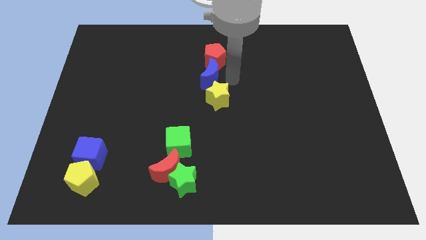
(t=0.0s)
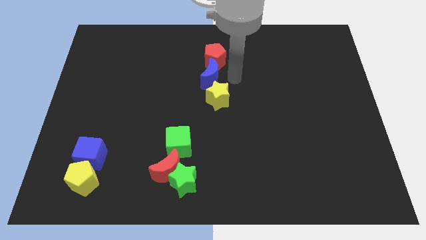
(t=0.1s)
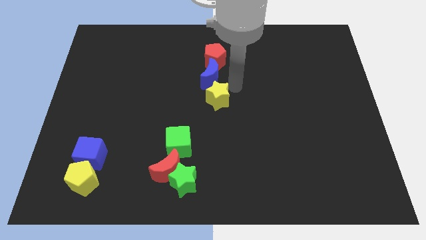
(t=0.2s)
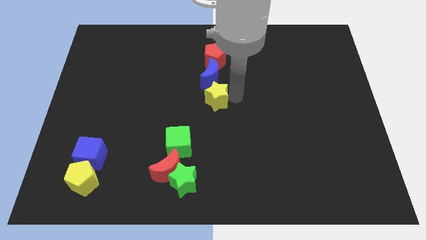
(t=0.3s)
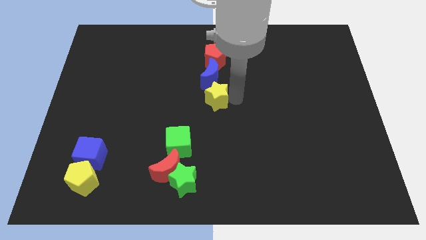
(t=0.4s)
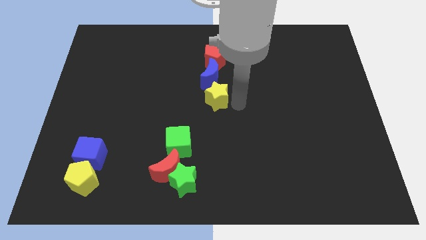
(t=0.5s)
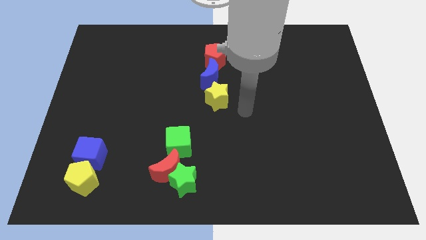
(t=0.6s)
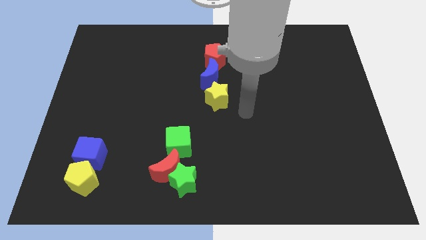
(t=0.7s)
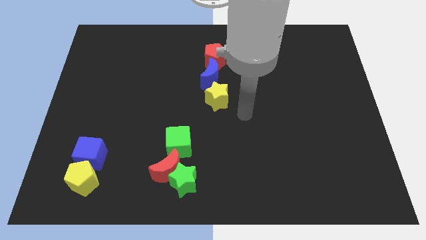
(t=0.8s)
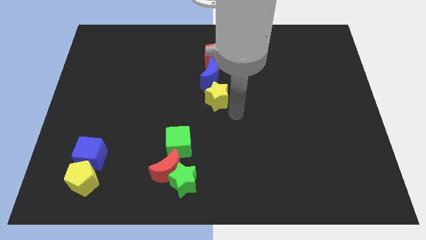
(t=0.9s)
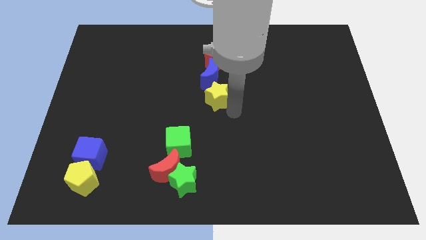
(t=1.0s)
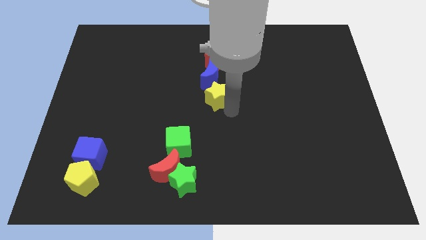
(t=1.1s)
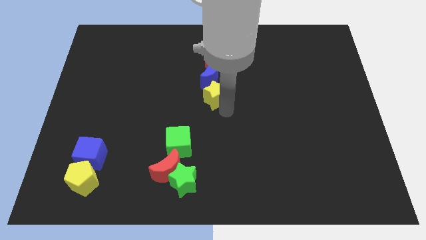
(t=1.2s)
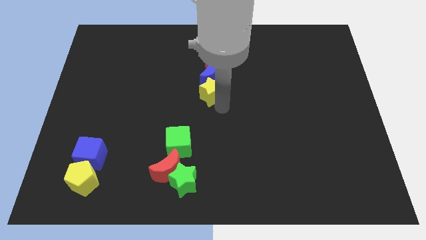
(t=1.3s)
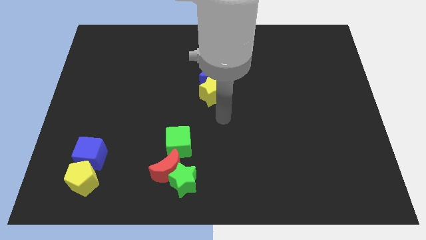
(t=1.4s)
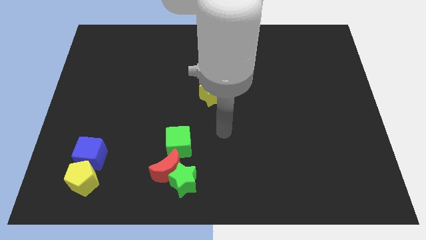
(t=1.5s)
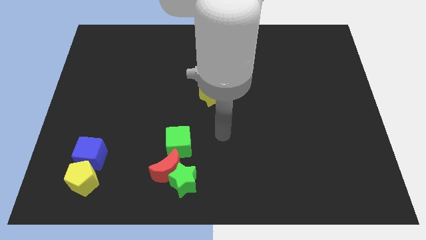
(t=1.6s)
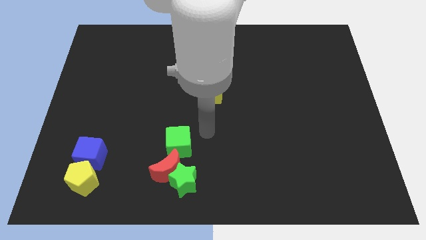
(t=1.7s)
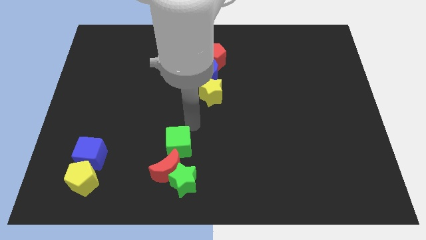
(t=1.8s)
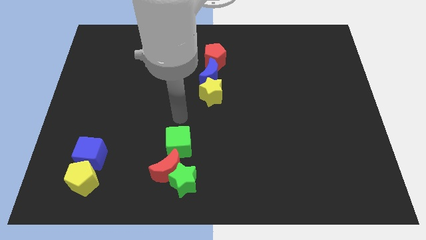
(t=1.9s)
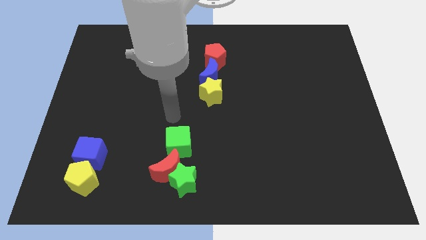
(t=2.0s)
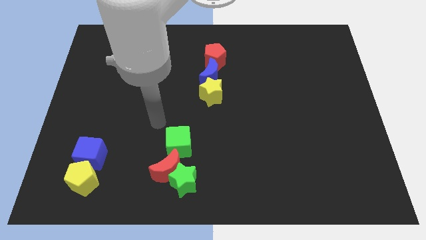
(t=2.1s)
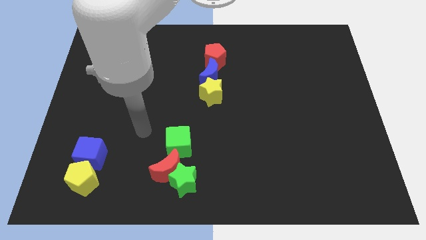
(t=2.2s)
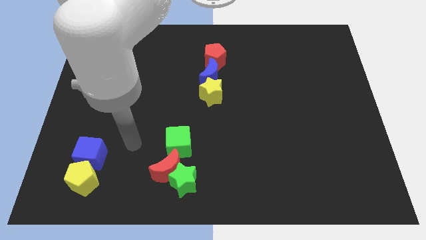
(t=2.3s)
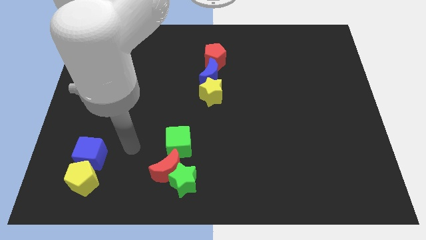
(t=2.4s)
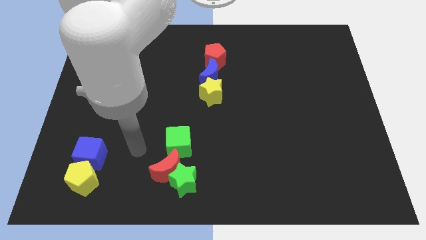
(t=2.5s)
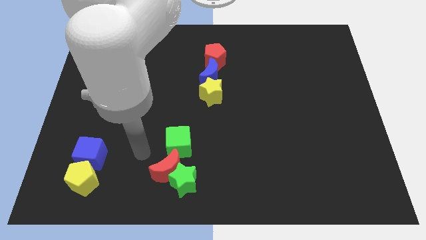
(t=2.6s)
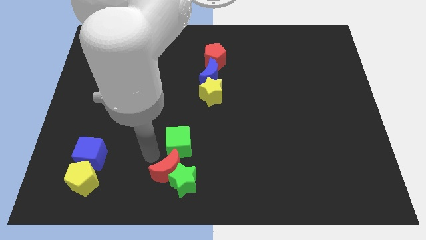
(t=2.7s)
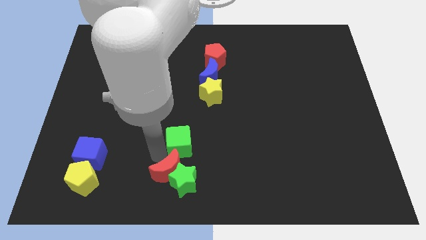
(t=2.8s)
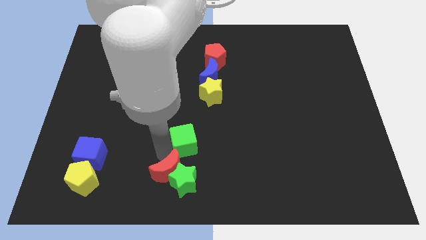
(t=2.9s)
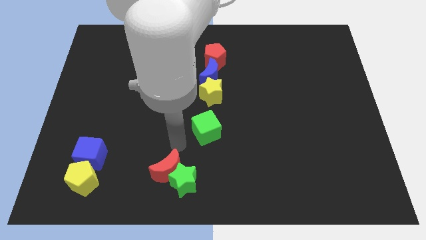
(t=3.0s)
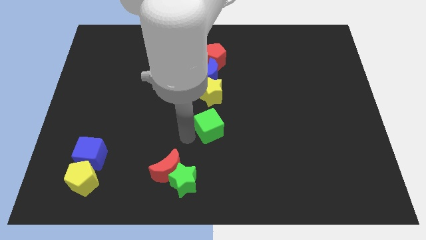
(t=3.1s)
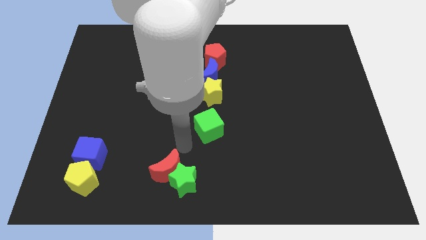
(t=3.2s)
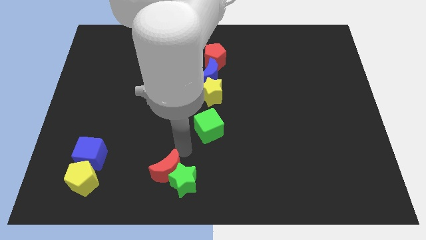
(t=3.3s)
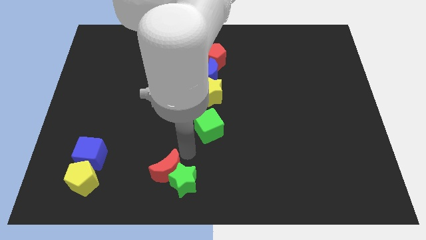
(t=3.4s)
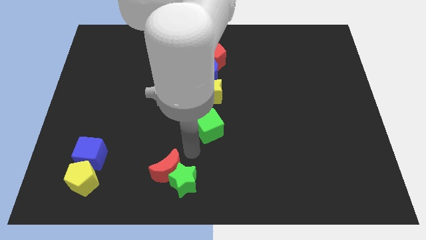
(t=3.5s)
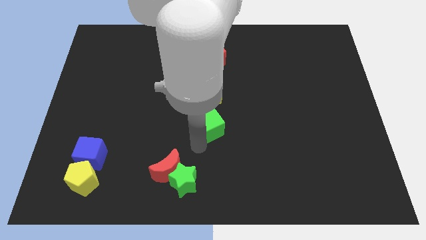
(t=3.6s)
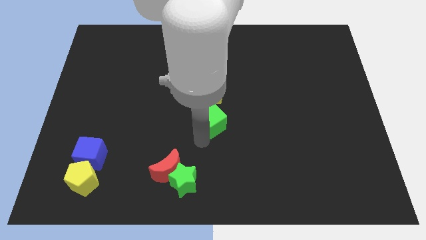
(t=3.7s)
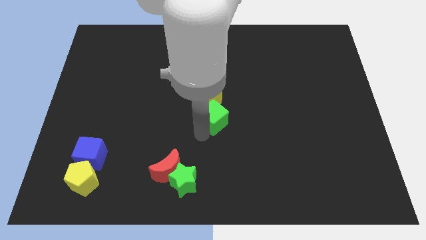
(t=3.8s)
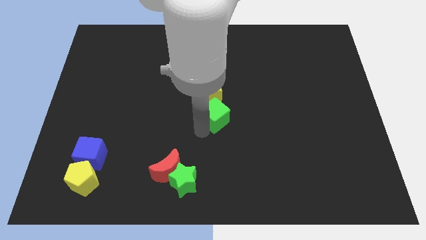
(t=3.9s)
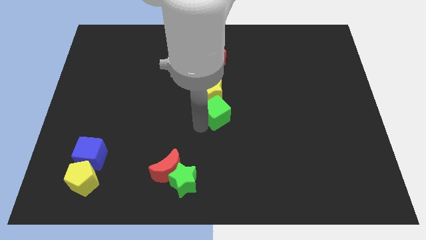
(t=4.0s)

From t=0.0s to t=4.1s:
move green cube below the yellow star

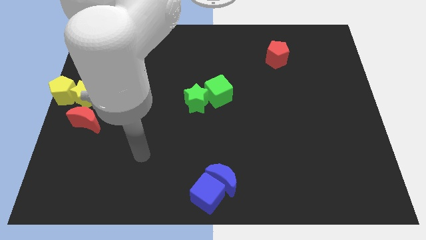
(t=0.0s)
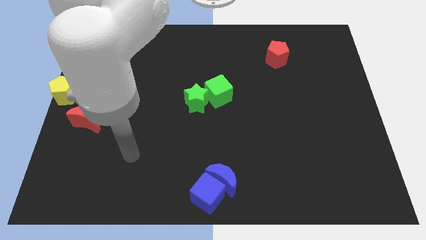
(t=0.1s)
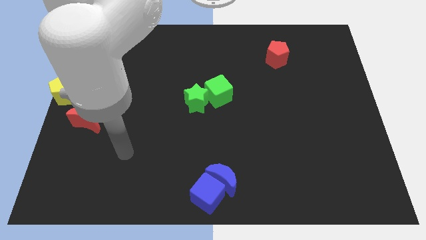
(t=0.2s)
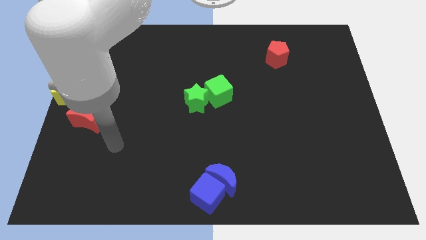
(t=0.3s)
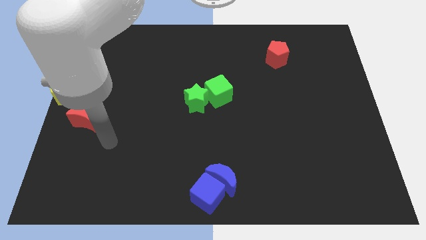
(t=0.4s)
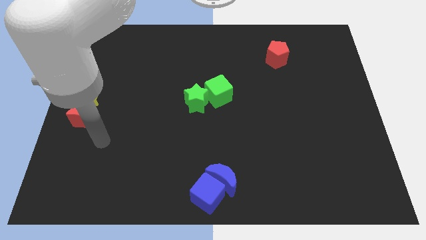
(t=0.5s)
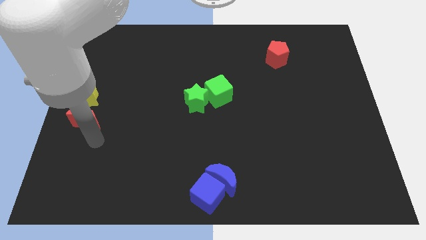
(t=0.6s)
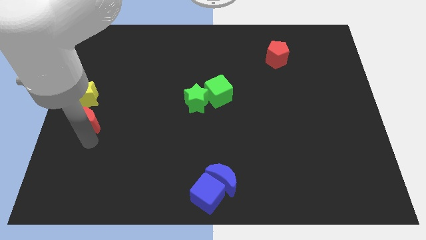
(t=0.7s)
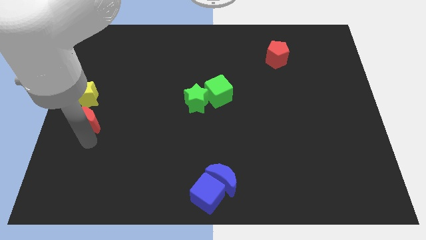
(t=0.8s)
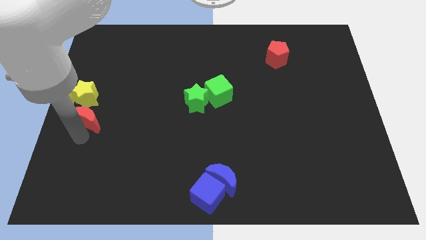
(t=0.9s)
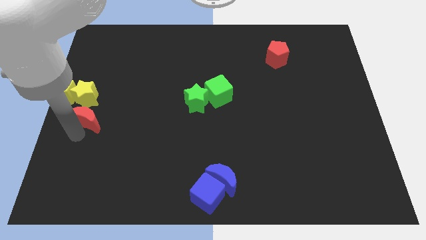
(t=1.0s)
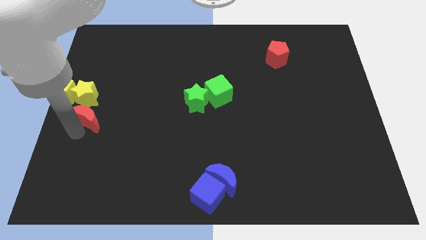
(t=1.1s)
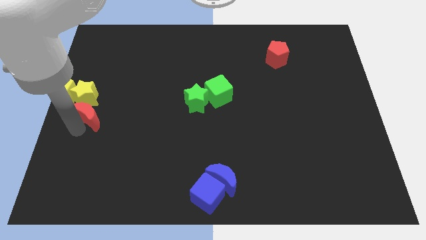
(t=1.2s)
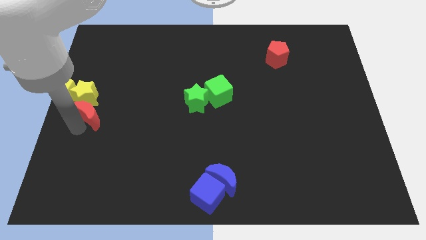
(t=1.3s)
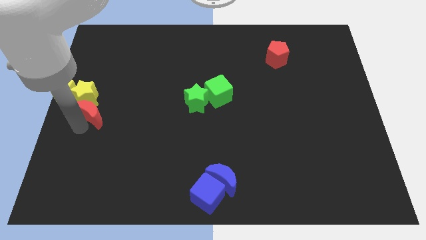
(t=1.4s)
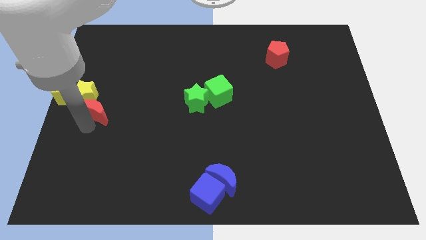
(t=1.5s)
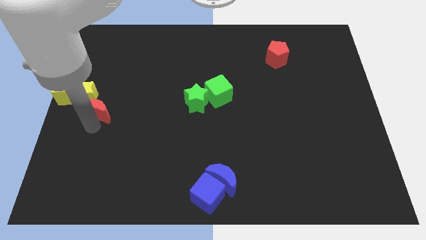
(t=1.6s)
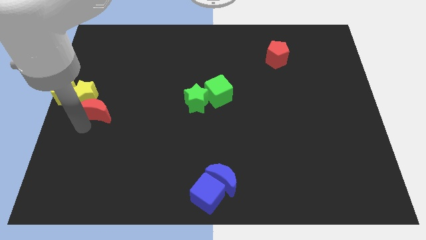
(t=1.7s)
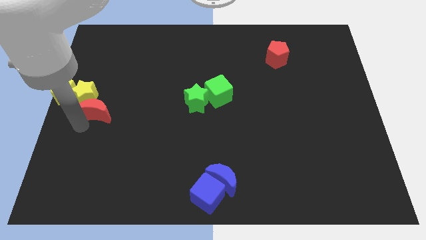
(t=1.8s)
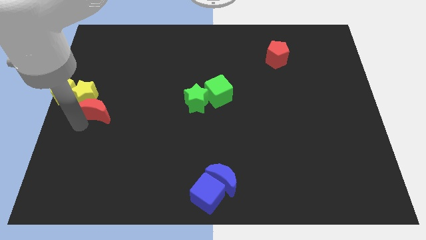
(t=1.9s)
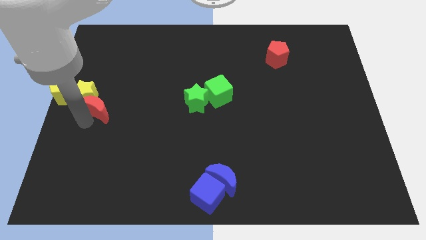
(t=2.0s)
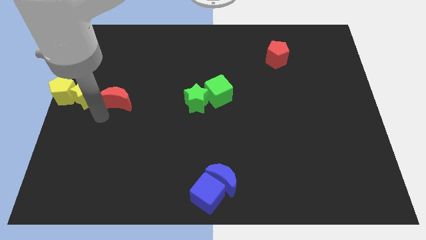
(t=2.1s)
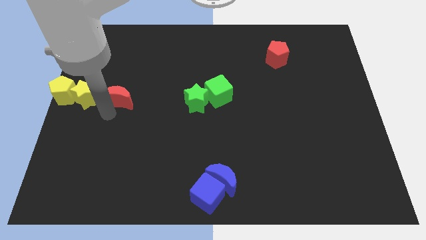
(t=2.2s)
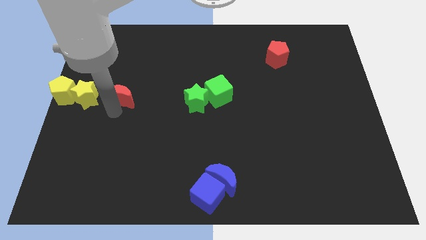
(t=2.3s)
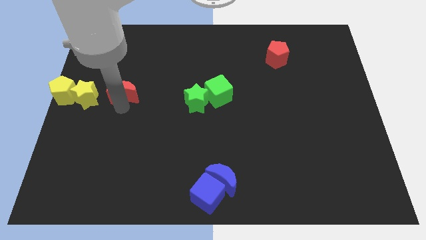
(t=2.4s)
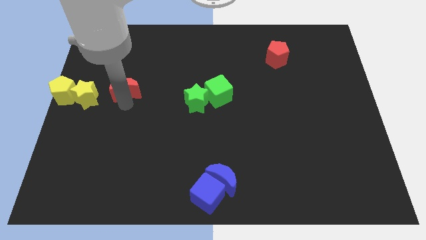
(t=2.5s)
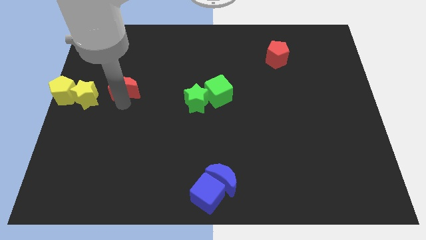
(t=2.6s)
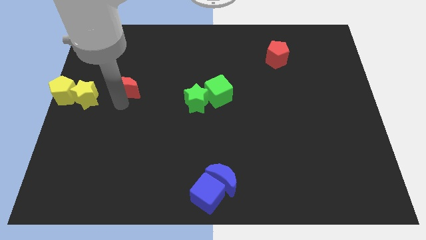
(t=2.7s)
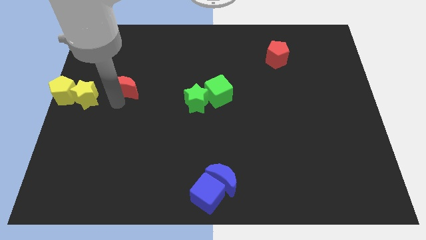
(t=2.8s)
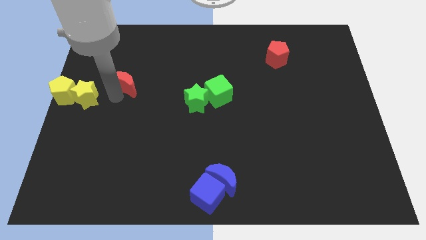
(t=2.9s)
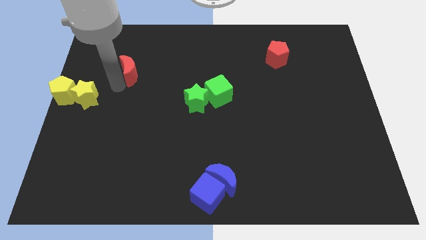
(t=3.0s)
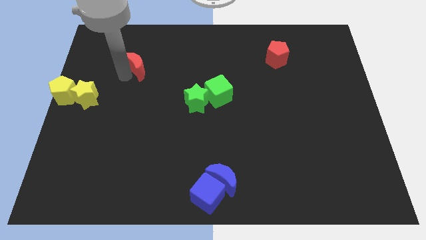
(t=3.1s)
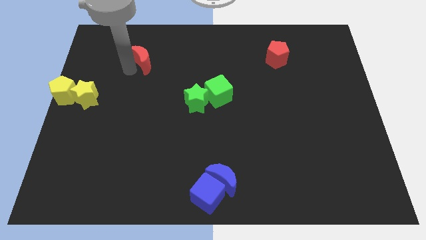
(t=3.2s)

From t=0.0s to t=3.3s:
move the red moon diagonal above the yellow star

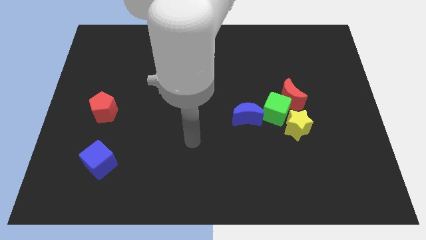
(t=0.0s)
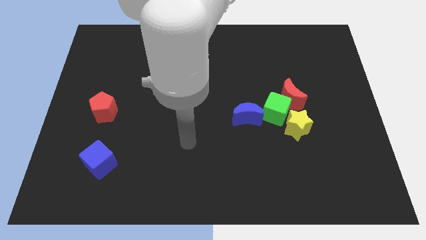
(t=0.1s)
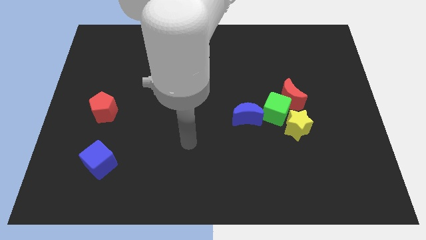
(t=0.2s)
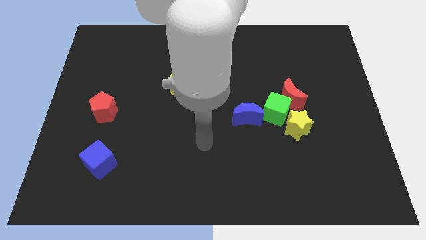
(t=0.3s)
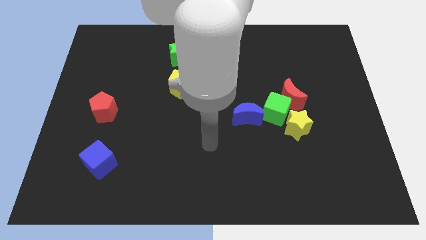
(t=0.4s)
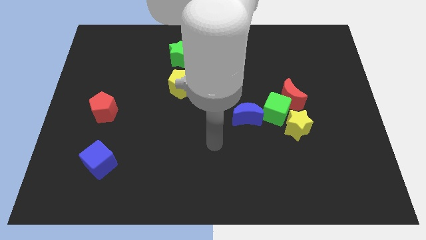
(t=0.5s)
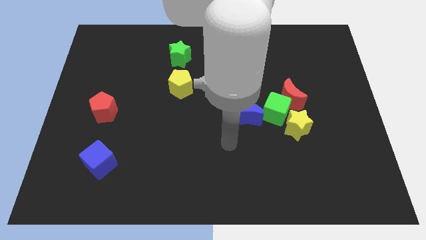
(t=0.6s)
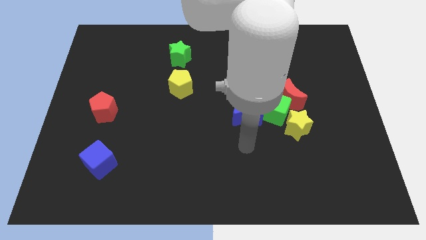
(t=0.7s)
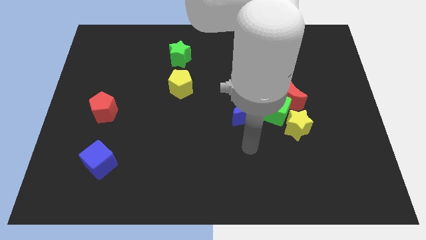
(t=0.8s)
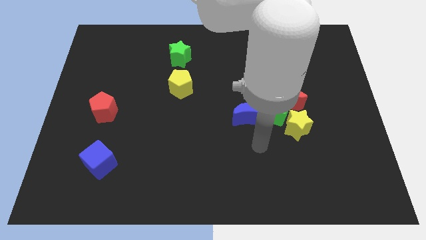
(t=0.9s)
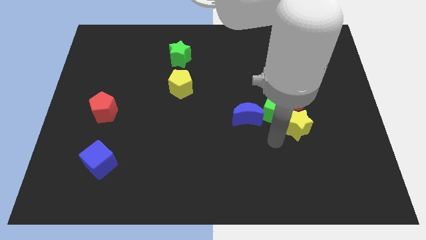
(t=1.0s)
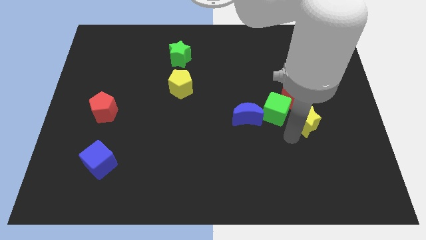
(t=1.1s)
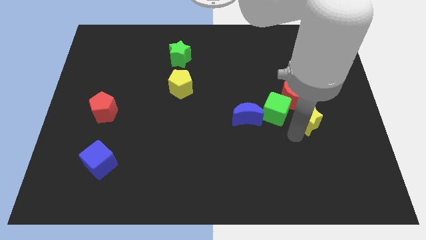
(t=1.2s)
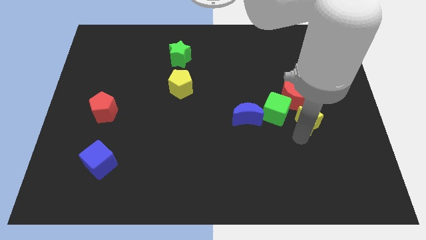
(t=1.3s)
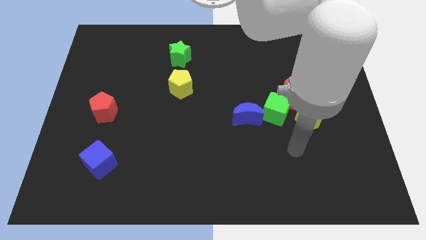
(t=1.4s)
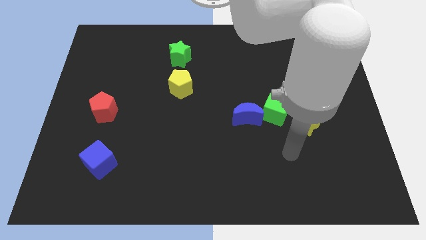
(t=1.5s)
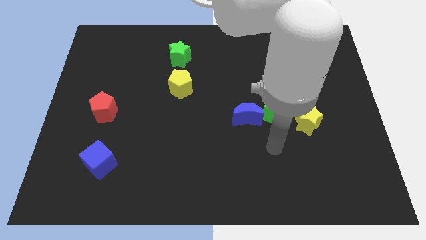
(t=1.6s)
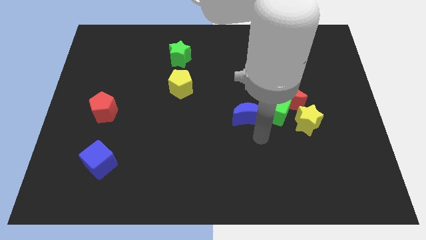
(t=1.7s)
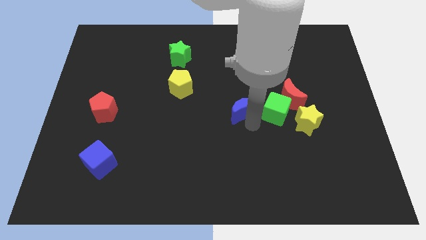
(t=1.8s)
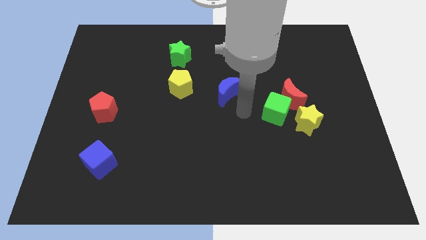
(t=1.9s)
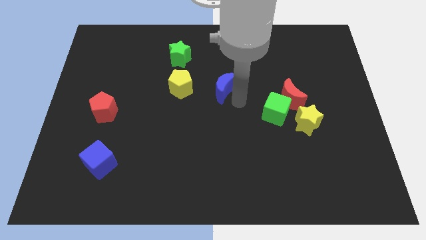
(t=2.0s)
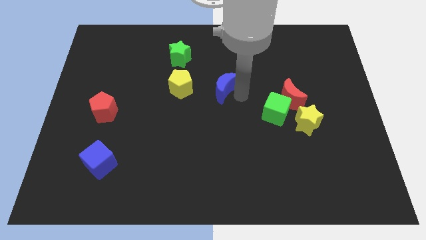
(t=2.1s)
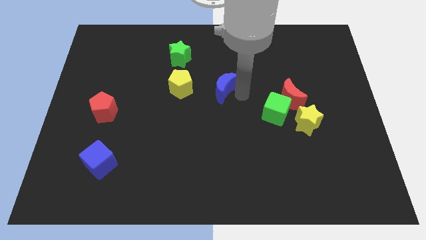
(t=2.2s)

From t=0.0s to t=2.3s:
slightly push the blue crescent upwards
